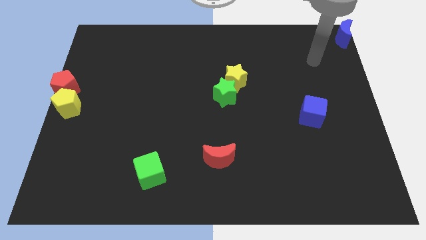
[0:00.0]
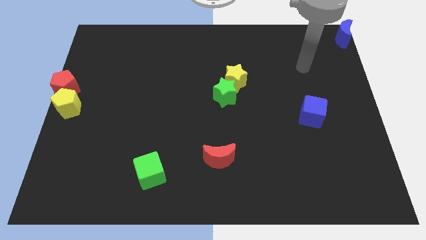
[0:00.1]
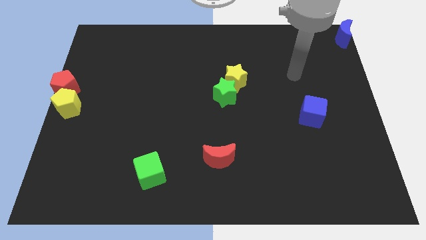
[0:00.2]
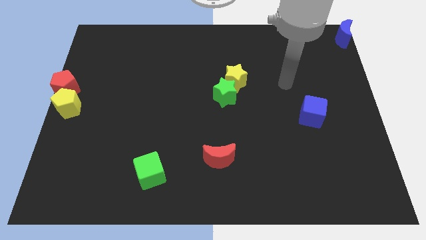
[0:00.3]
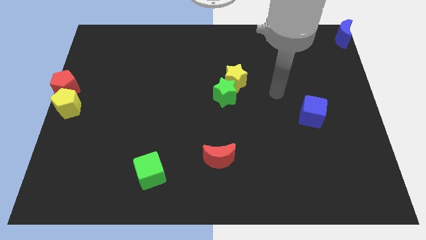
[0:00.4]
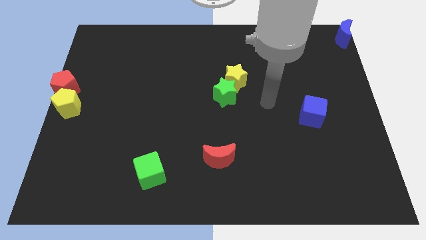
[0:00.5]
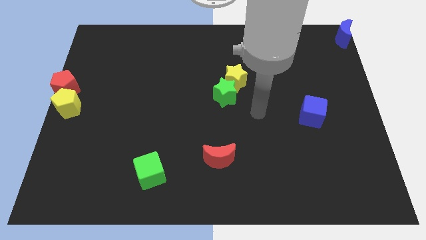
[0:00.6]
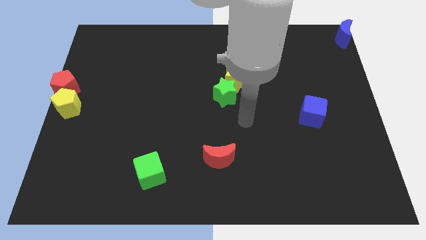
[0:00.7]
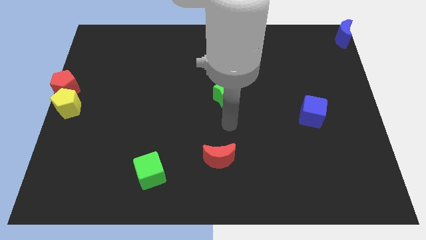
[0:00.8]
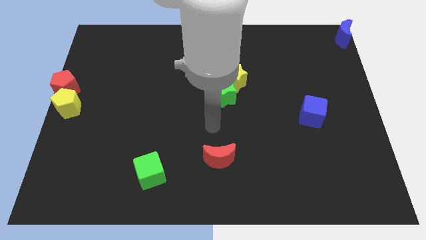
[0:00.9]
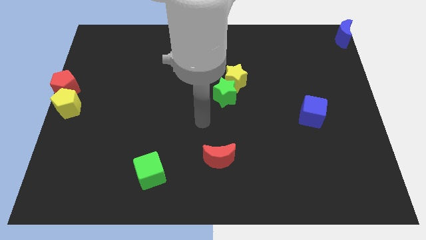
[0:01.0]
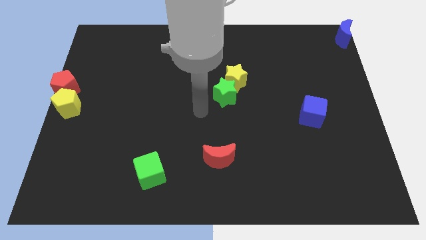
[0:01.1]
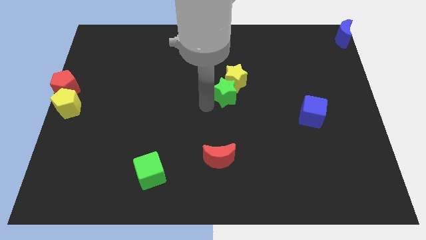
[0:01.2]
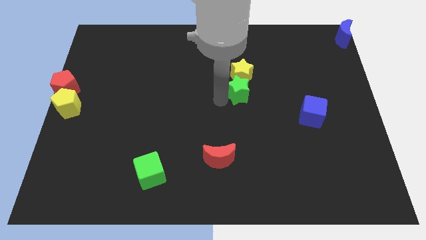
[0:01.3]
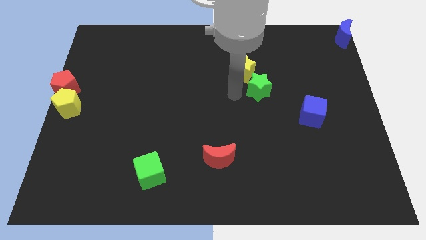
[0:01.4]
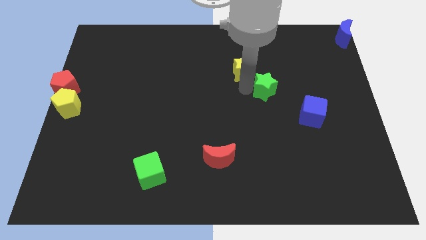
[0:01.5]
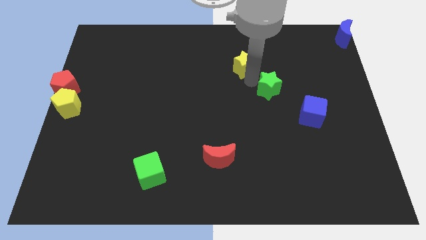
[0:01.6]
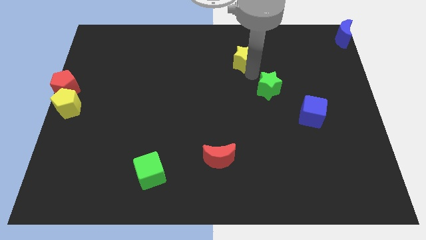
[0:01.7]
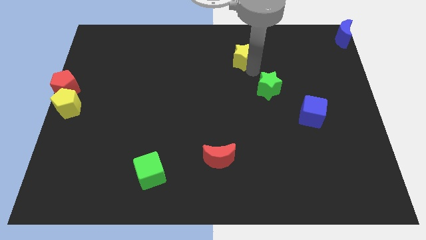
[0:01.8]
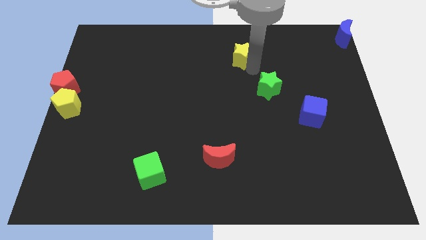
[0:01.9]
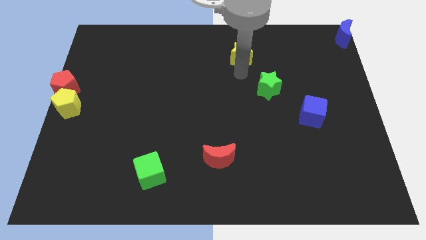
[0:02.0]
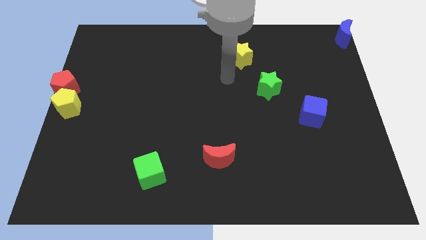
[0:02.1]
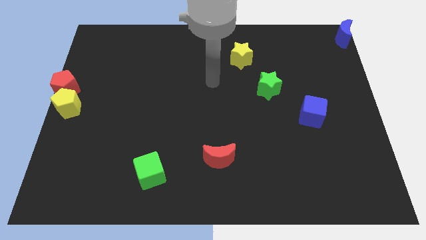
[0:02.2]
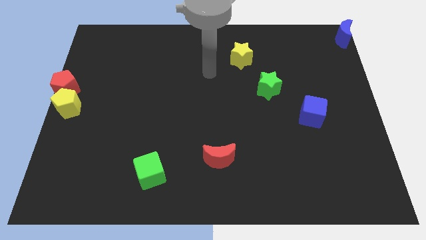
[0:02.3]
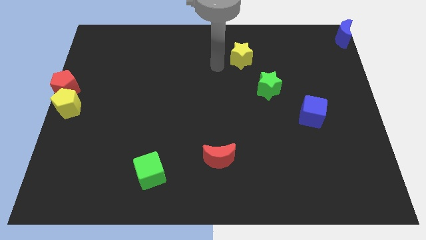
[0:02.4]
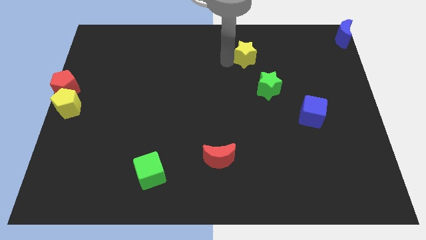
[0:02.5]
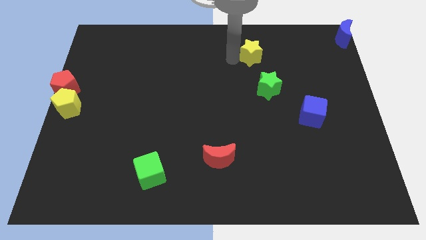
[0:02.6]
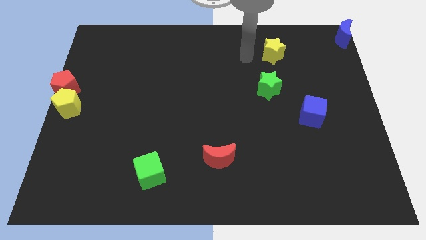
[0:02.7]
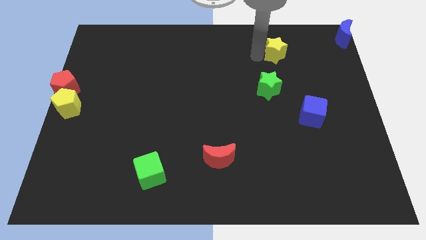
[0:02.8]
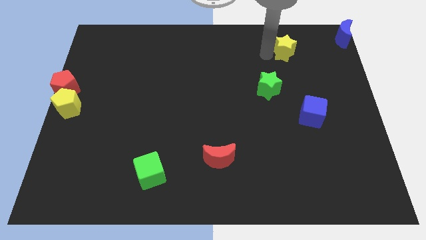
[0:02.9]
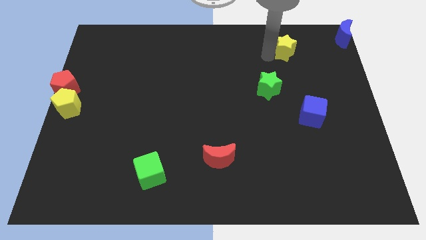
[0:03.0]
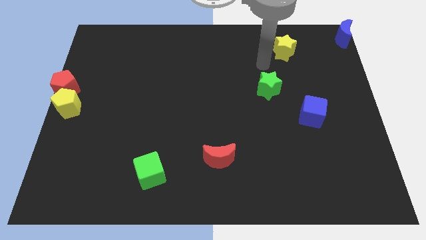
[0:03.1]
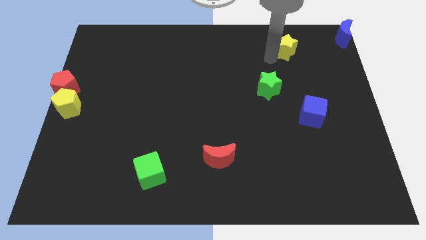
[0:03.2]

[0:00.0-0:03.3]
push the yellow star towards the blue crescent

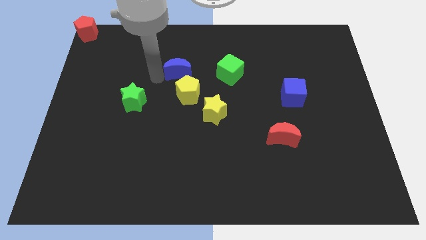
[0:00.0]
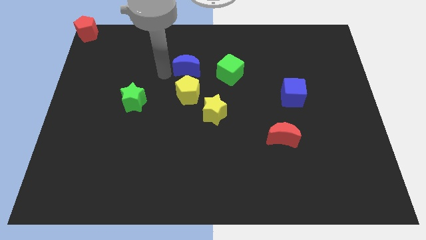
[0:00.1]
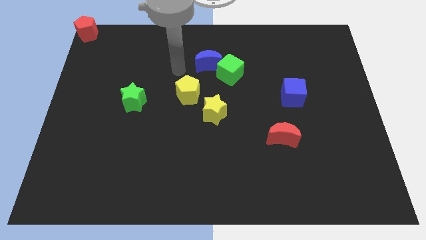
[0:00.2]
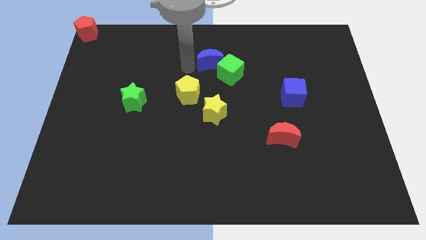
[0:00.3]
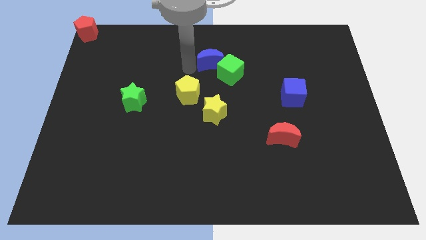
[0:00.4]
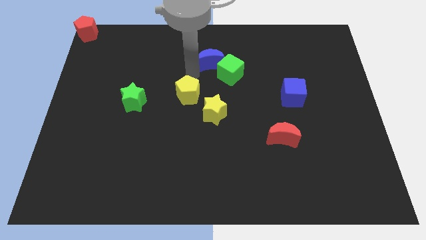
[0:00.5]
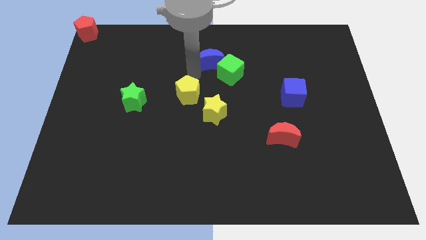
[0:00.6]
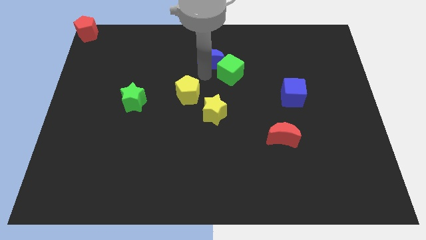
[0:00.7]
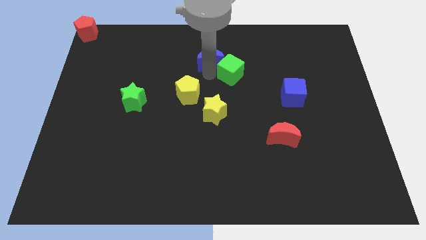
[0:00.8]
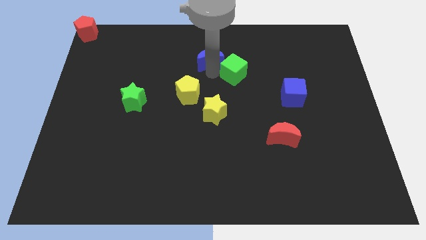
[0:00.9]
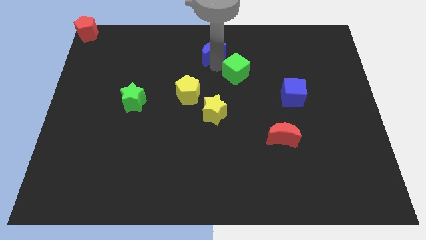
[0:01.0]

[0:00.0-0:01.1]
place the blue moon at the top left side of green cube

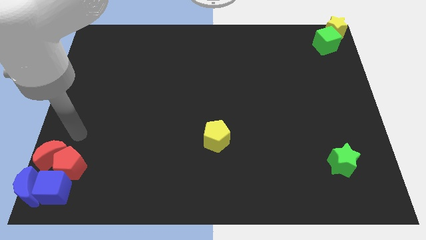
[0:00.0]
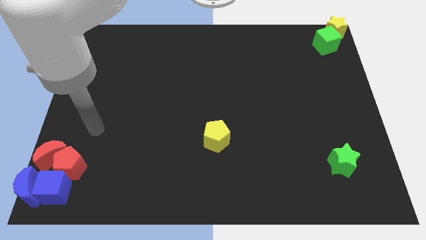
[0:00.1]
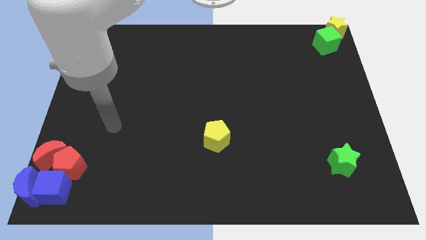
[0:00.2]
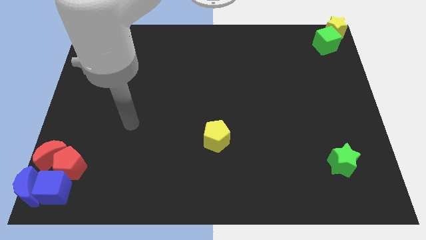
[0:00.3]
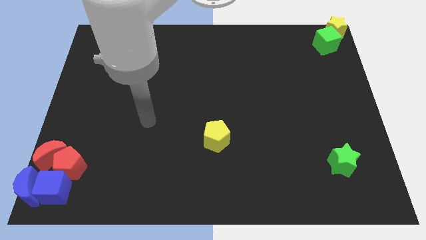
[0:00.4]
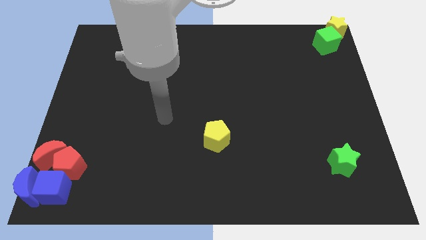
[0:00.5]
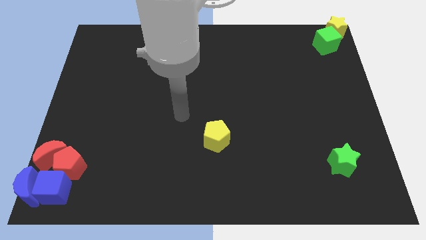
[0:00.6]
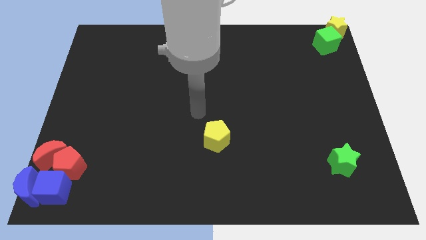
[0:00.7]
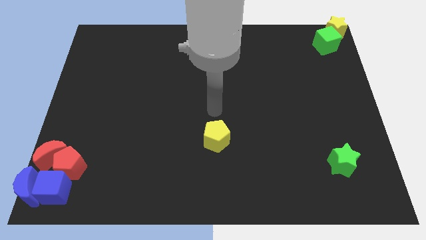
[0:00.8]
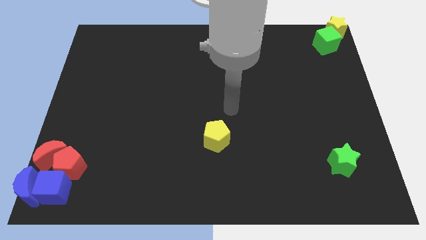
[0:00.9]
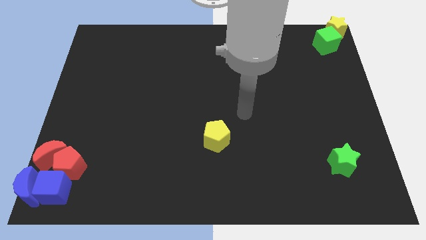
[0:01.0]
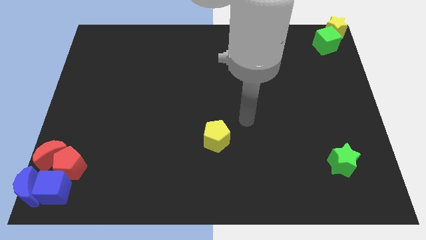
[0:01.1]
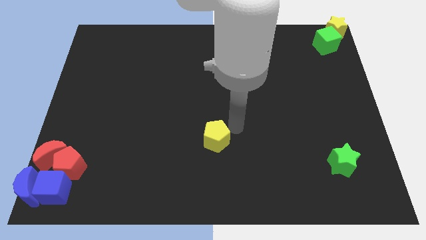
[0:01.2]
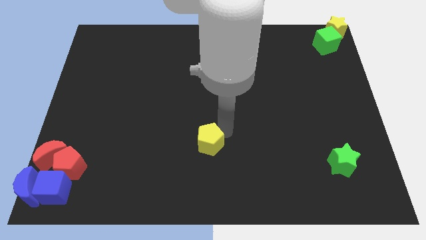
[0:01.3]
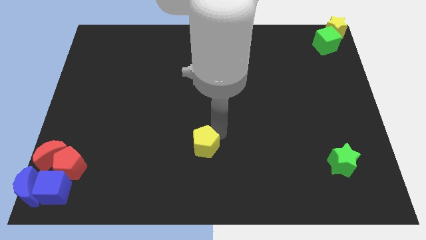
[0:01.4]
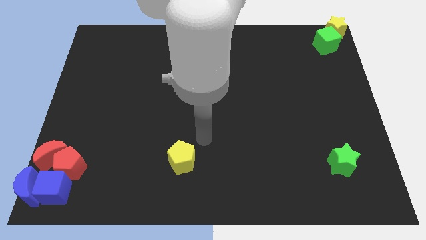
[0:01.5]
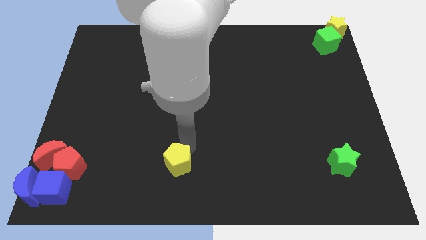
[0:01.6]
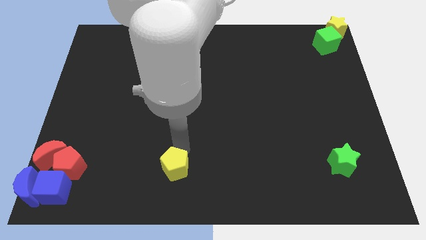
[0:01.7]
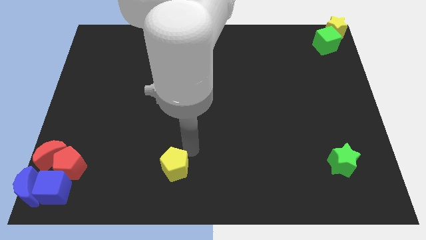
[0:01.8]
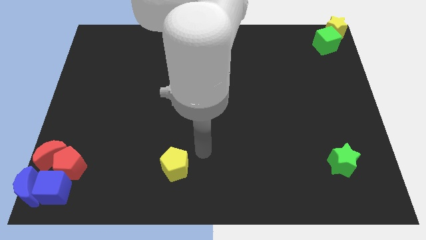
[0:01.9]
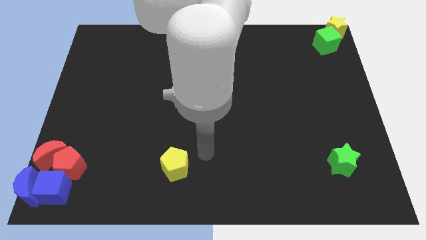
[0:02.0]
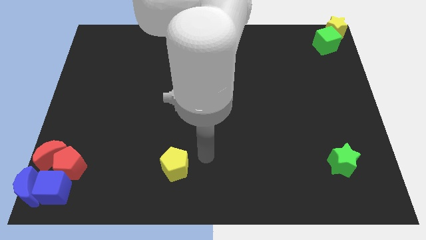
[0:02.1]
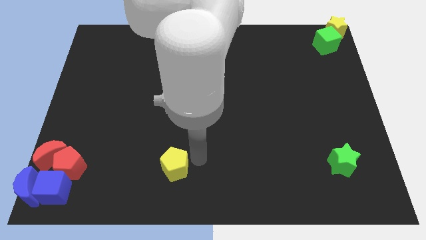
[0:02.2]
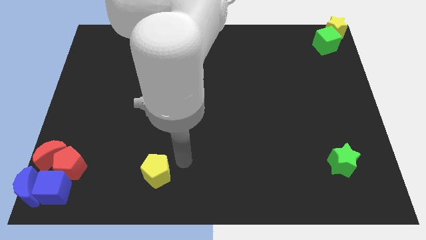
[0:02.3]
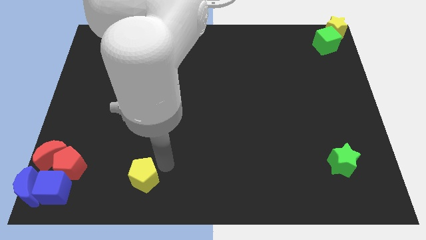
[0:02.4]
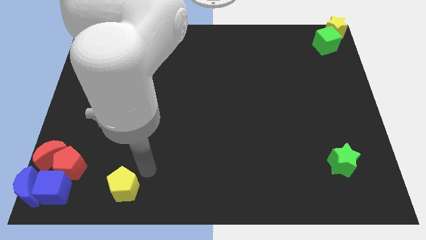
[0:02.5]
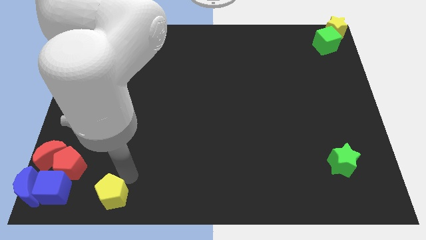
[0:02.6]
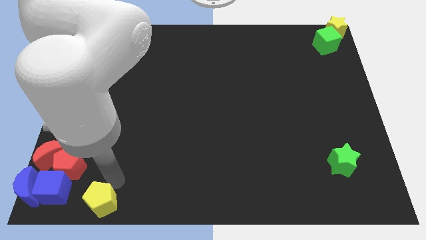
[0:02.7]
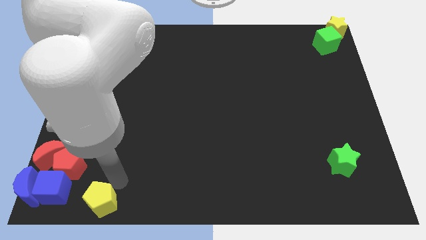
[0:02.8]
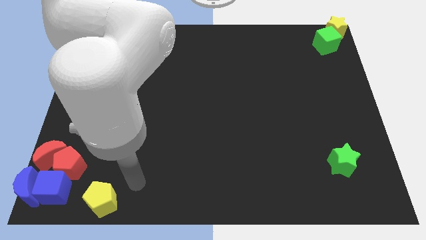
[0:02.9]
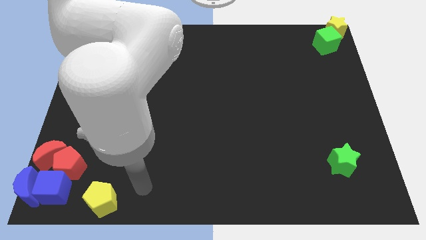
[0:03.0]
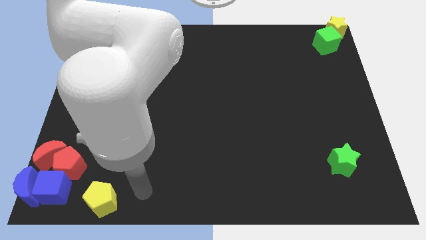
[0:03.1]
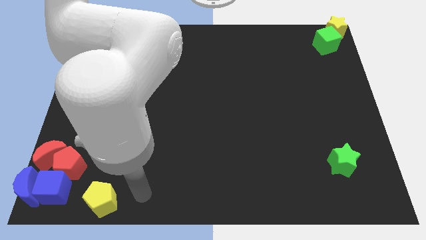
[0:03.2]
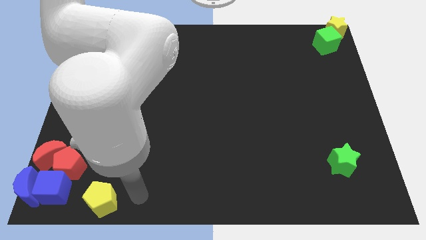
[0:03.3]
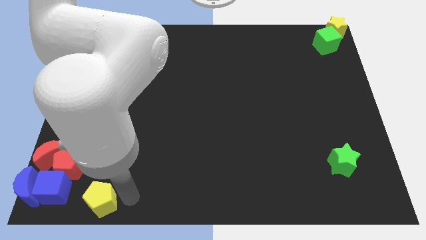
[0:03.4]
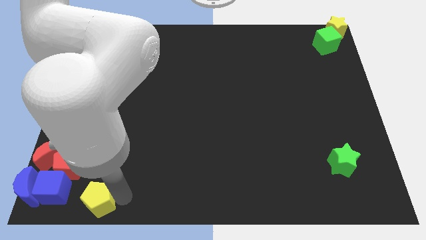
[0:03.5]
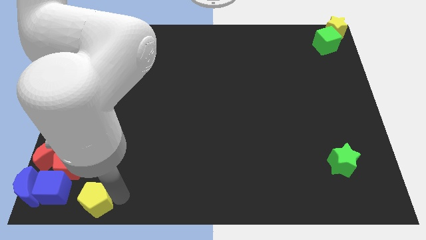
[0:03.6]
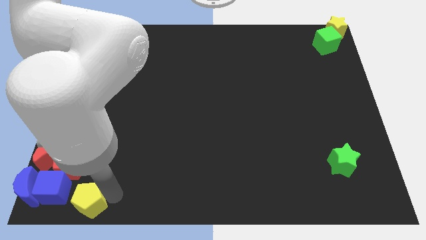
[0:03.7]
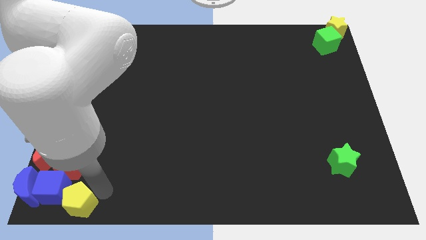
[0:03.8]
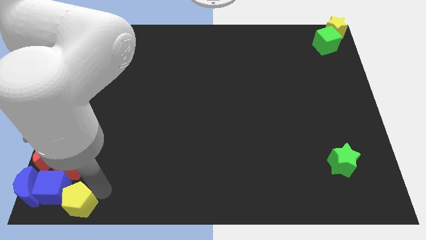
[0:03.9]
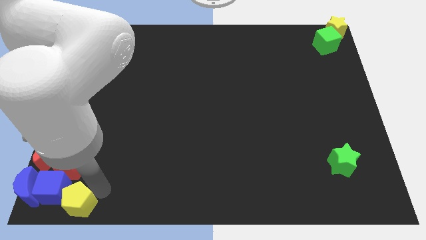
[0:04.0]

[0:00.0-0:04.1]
place the yellow pentagon to the bottom right side of the blue cube

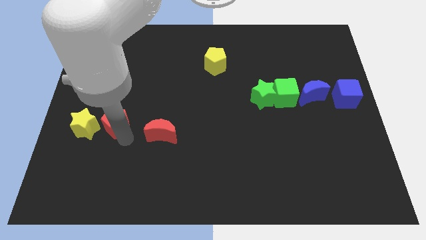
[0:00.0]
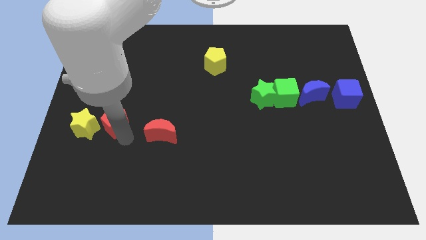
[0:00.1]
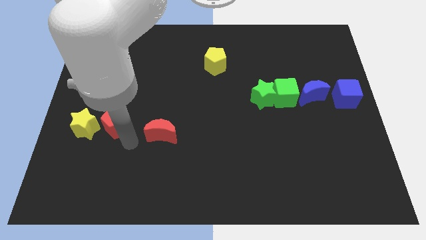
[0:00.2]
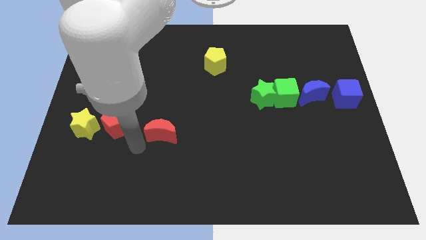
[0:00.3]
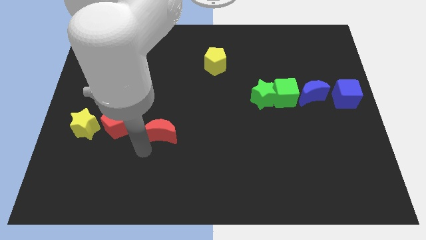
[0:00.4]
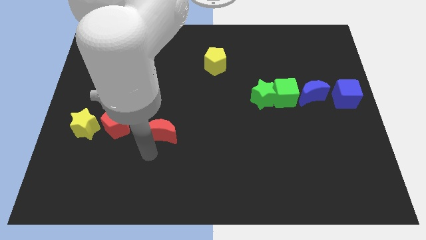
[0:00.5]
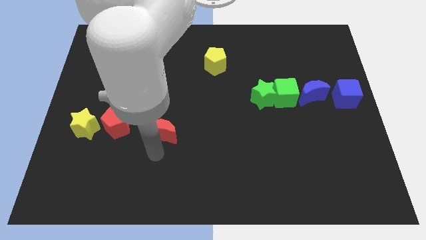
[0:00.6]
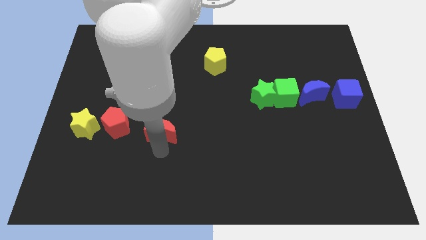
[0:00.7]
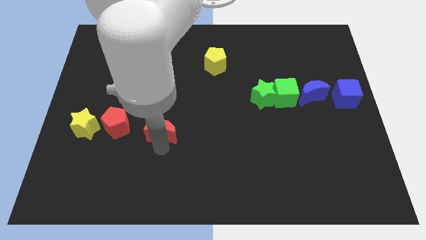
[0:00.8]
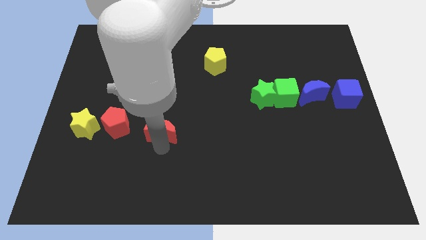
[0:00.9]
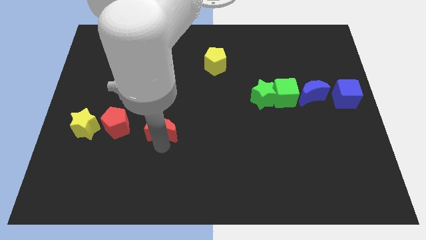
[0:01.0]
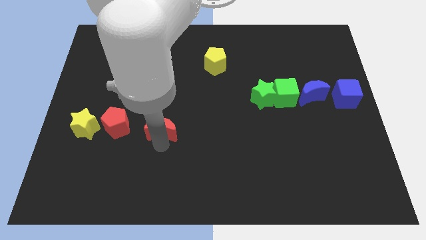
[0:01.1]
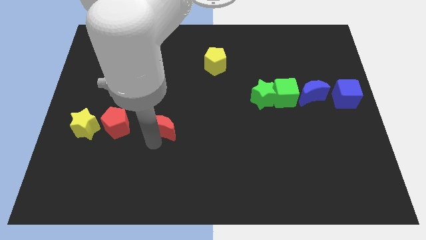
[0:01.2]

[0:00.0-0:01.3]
move the red pentagon to the right of the yellow star
